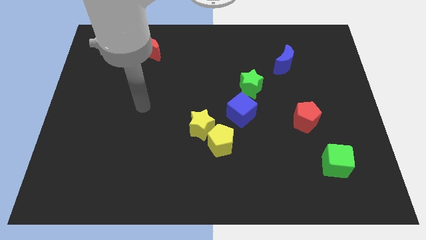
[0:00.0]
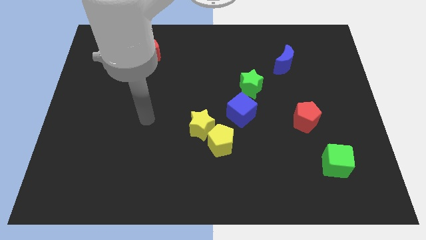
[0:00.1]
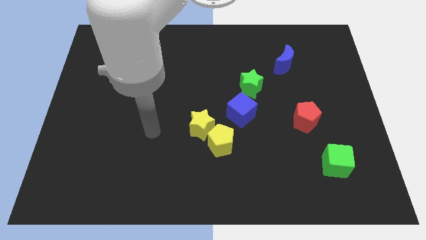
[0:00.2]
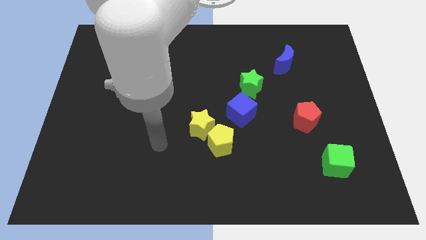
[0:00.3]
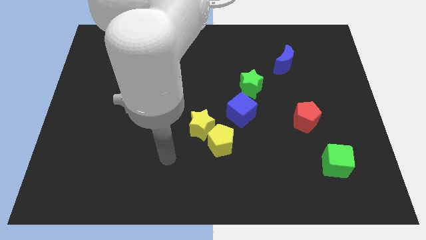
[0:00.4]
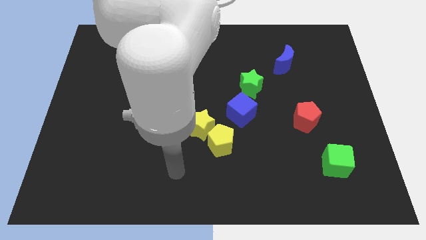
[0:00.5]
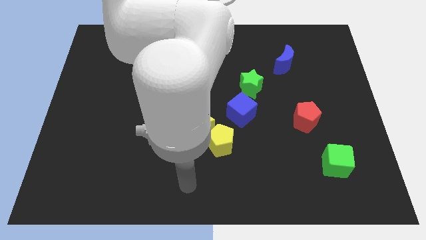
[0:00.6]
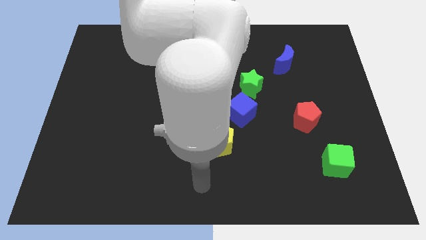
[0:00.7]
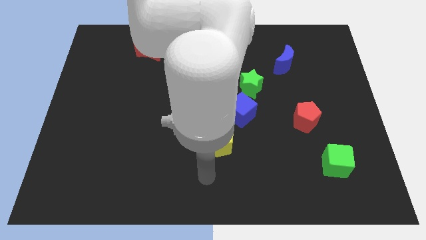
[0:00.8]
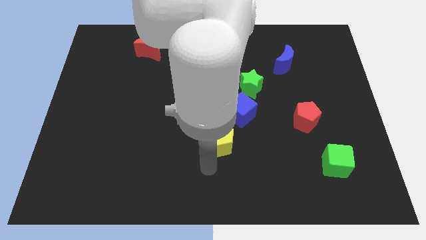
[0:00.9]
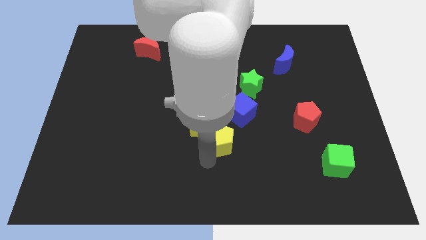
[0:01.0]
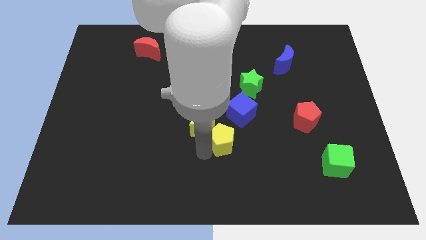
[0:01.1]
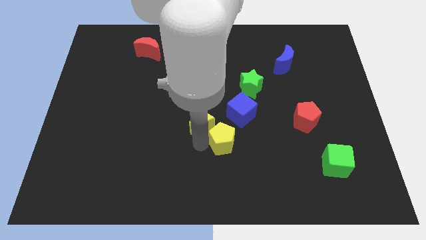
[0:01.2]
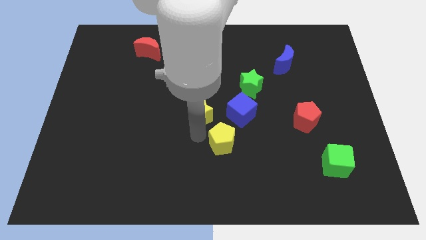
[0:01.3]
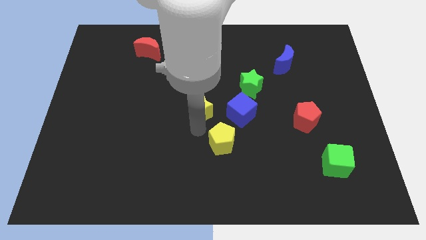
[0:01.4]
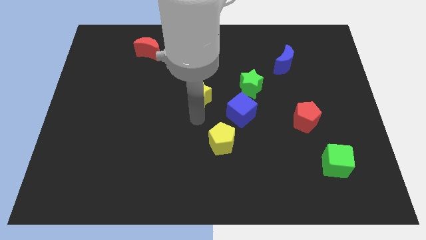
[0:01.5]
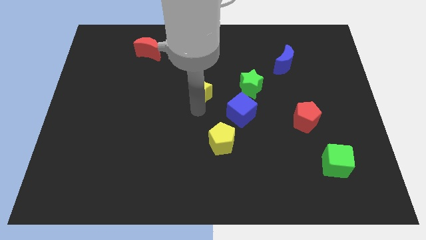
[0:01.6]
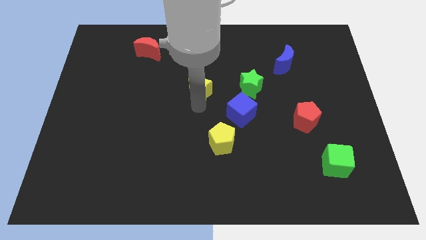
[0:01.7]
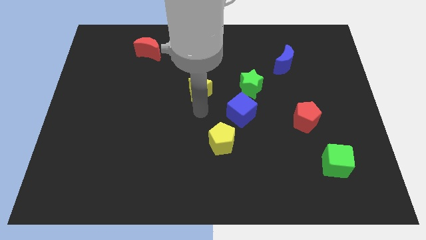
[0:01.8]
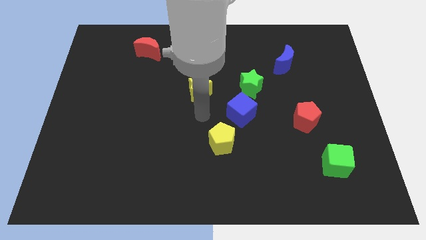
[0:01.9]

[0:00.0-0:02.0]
move the yellow star to the left of the green star

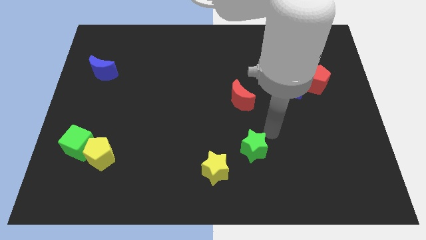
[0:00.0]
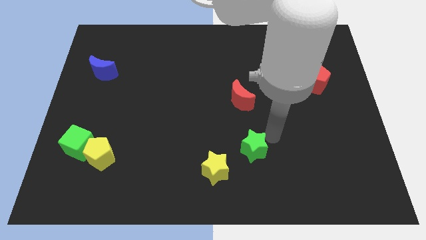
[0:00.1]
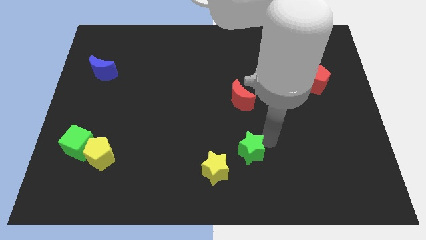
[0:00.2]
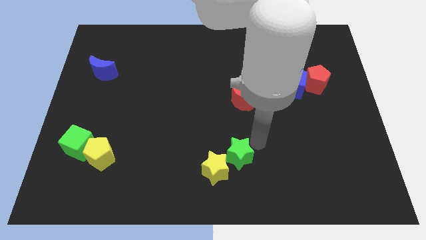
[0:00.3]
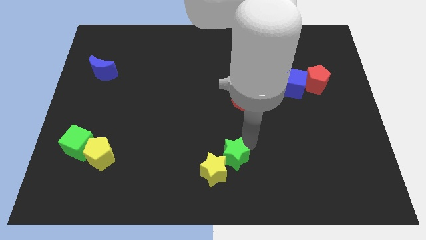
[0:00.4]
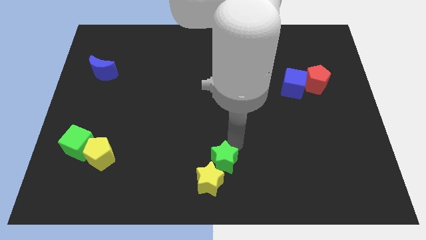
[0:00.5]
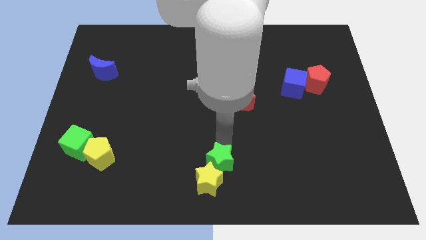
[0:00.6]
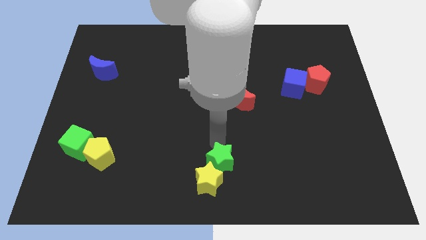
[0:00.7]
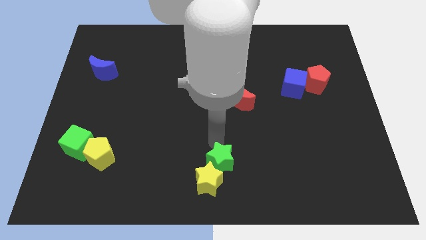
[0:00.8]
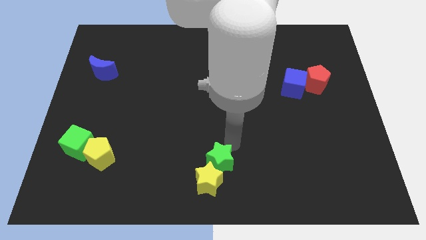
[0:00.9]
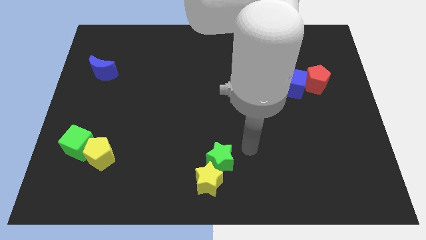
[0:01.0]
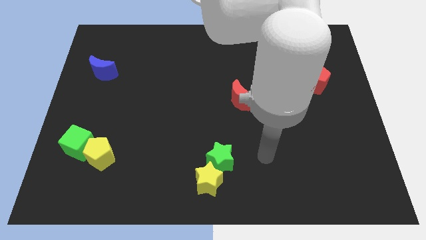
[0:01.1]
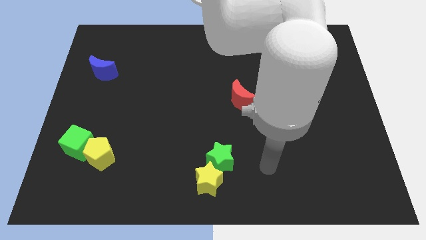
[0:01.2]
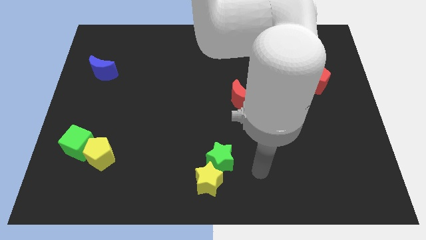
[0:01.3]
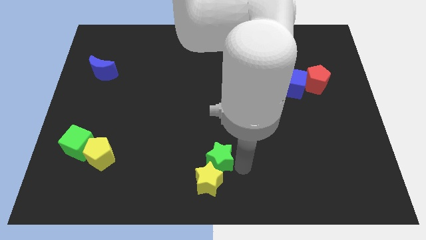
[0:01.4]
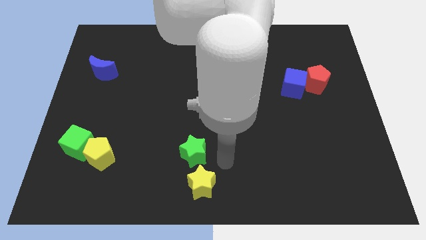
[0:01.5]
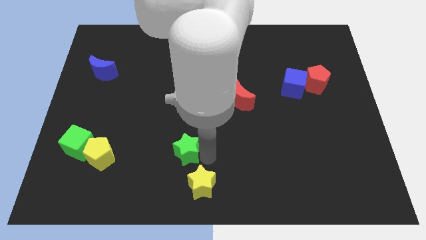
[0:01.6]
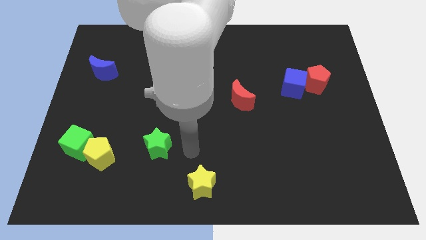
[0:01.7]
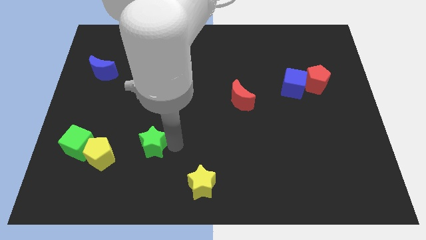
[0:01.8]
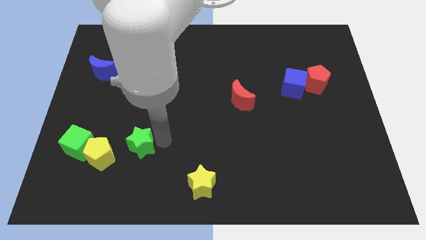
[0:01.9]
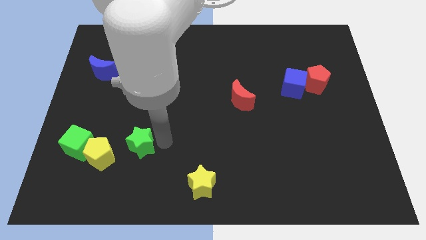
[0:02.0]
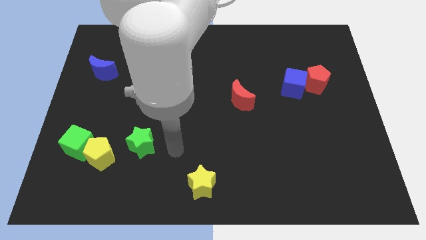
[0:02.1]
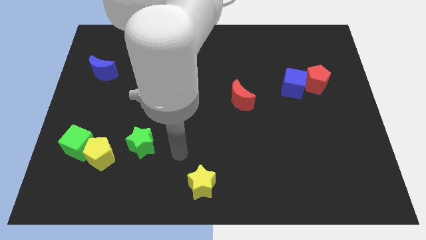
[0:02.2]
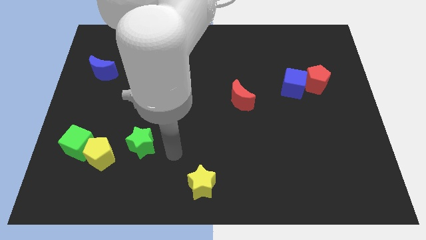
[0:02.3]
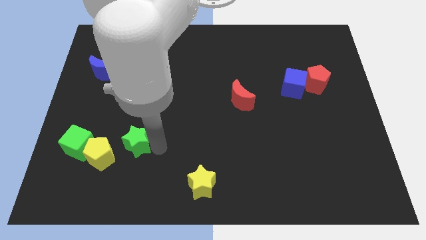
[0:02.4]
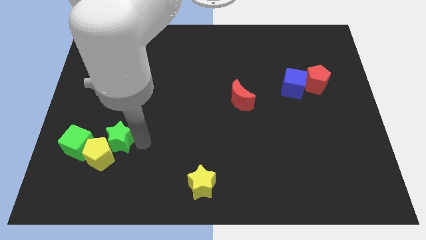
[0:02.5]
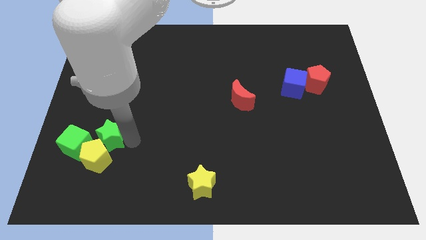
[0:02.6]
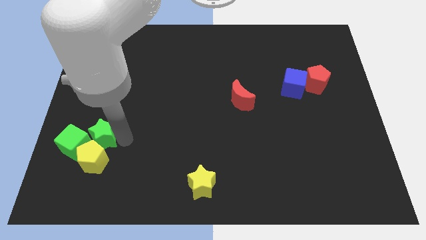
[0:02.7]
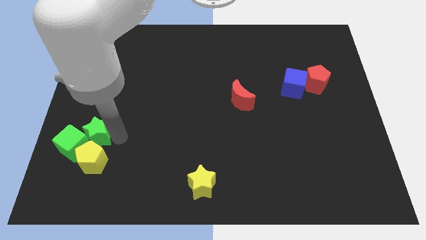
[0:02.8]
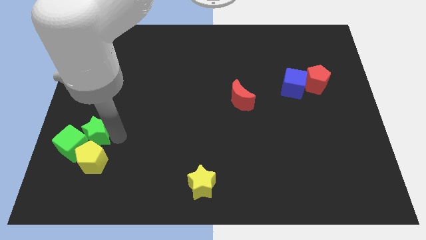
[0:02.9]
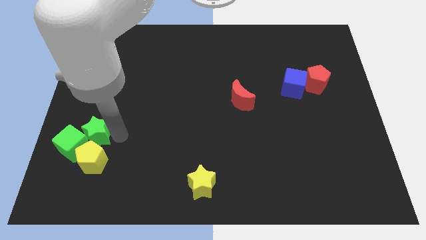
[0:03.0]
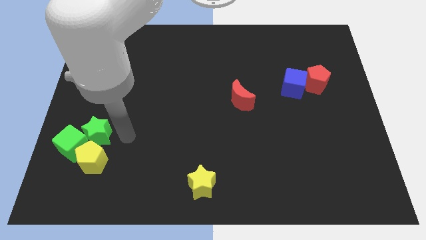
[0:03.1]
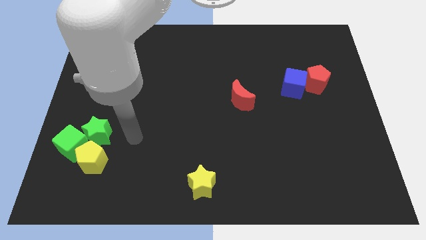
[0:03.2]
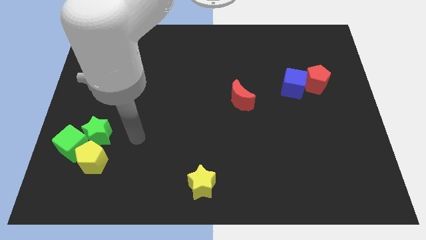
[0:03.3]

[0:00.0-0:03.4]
push the green star to the top of the yellow pentagon

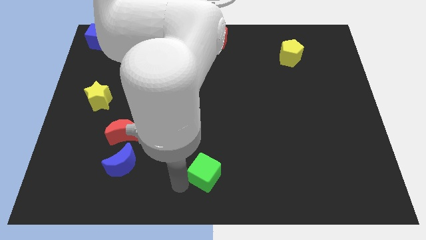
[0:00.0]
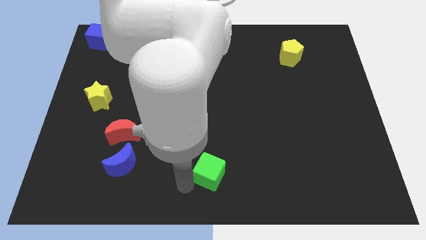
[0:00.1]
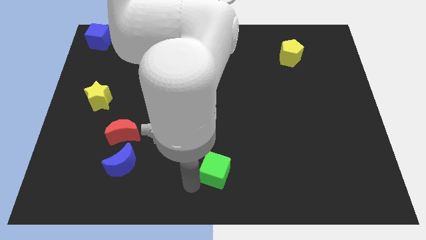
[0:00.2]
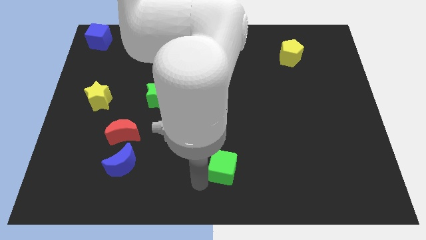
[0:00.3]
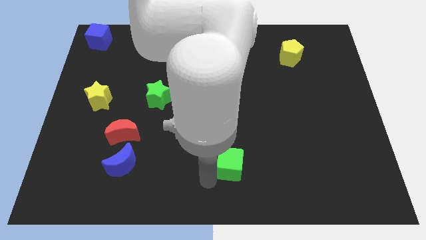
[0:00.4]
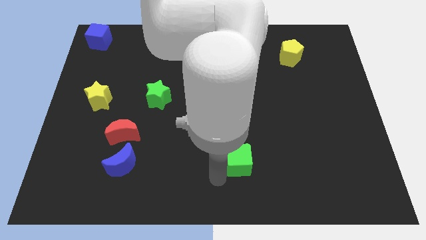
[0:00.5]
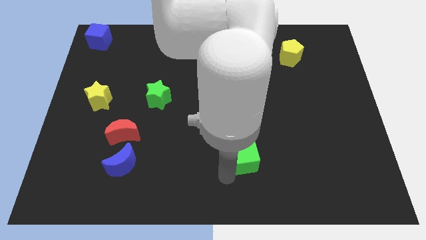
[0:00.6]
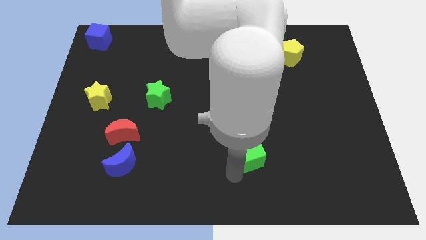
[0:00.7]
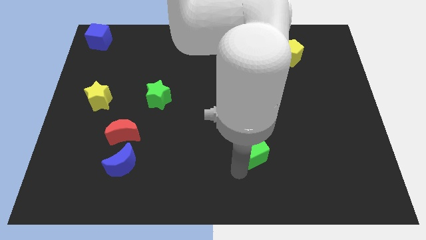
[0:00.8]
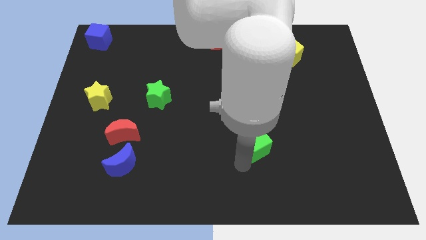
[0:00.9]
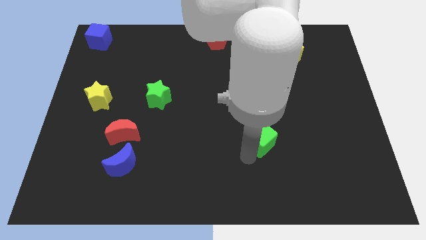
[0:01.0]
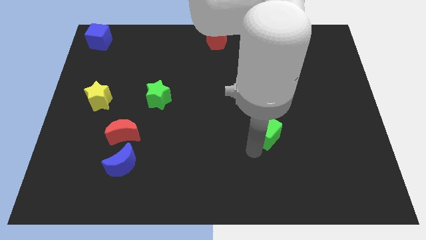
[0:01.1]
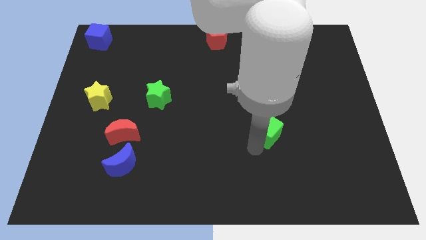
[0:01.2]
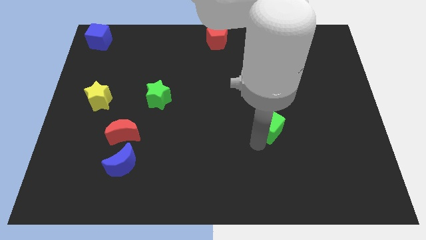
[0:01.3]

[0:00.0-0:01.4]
place green cube to the bottom of yellow pentagon

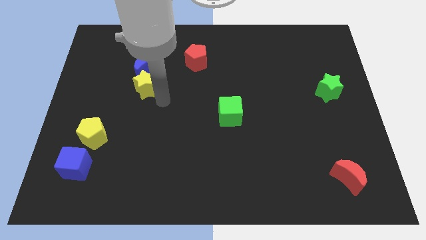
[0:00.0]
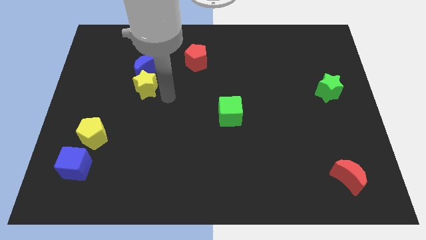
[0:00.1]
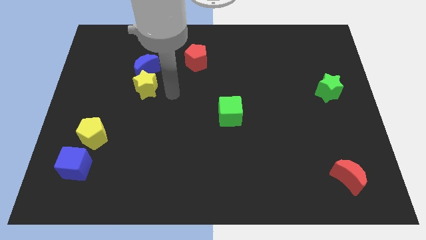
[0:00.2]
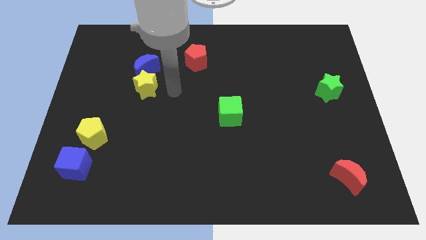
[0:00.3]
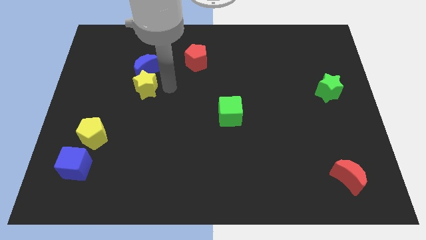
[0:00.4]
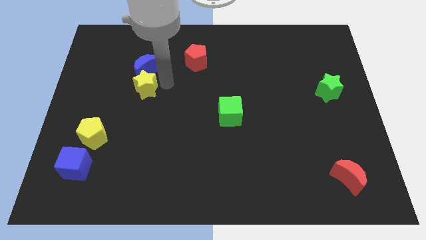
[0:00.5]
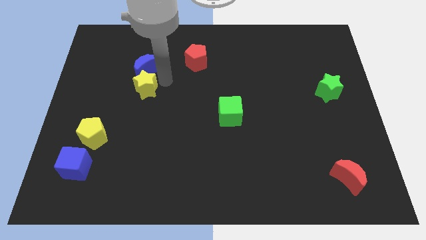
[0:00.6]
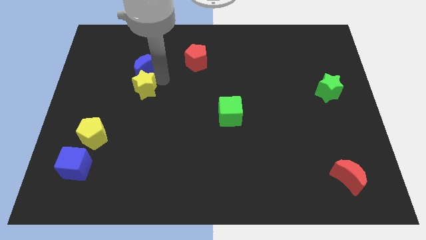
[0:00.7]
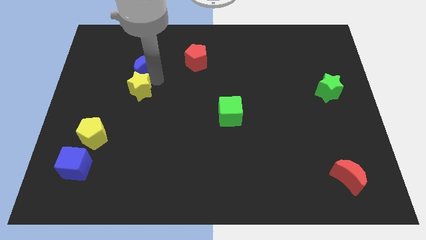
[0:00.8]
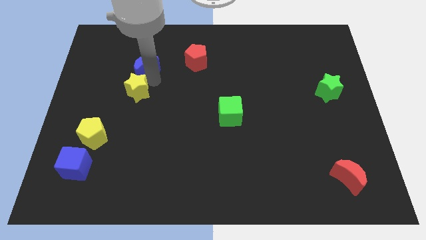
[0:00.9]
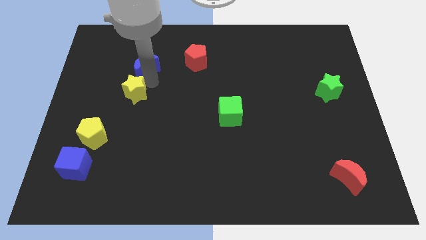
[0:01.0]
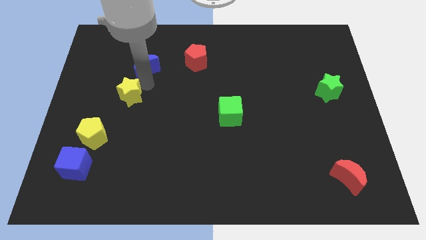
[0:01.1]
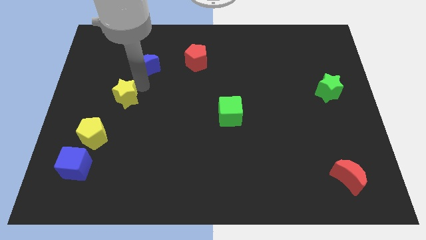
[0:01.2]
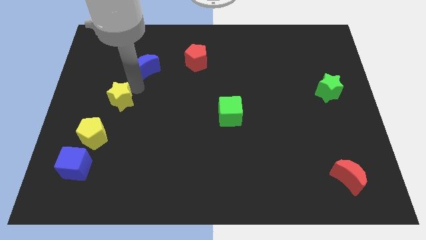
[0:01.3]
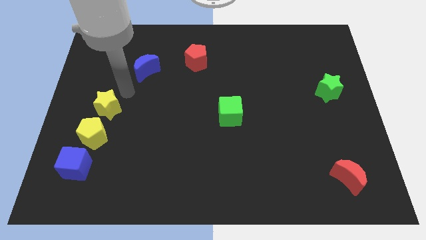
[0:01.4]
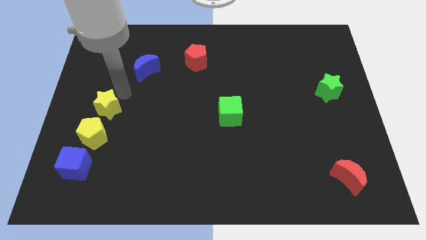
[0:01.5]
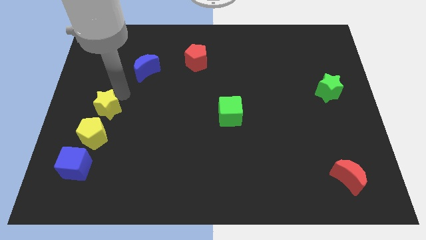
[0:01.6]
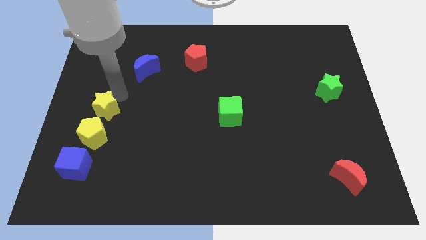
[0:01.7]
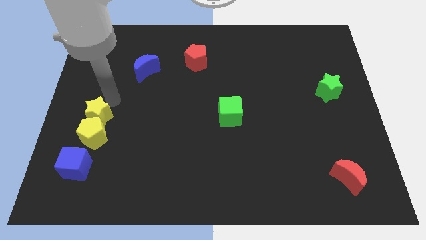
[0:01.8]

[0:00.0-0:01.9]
push the yellow star on top of yellow pentagon

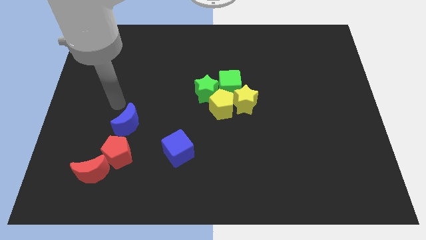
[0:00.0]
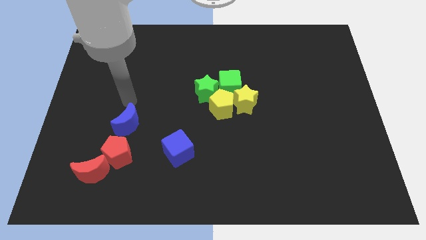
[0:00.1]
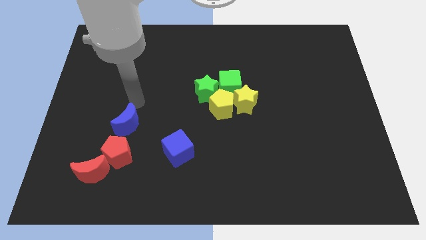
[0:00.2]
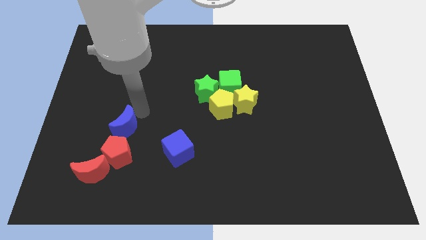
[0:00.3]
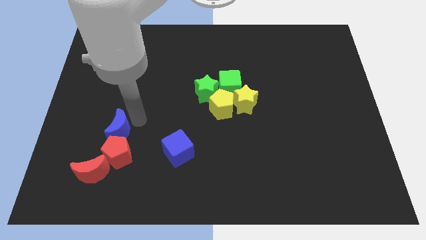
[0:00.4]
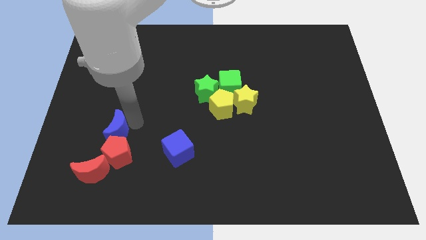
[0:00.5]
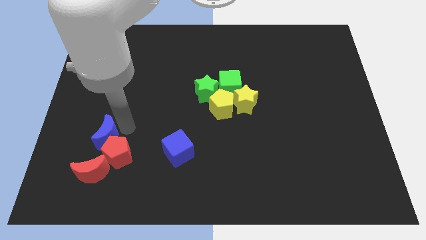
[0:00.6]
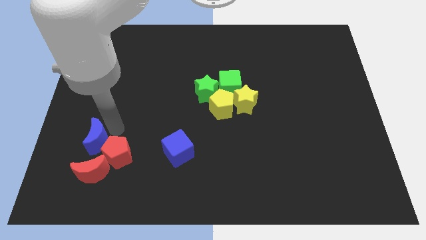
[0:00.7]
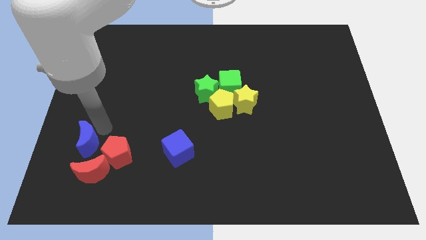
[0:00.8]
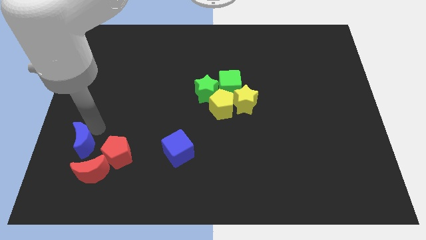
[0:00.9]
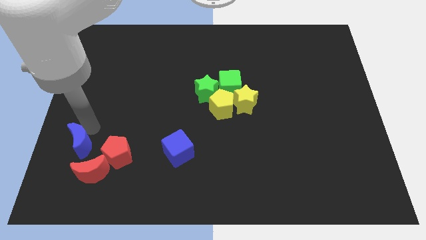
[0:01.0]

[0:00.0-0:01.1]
move the blue crescent above the red crescent
